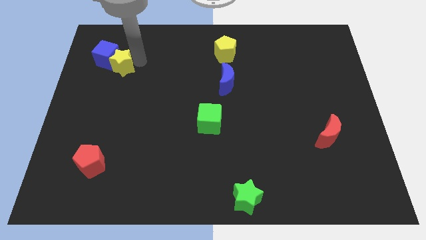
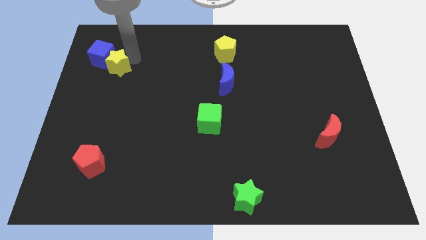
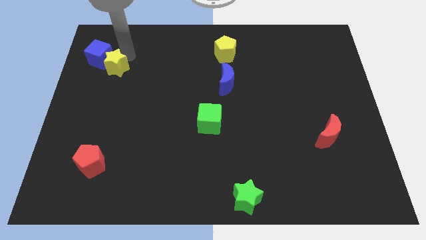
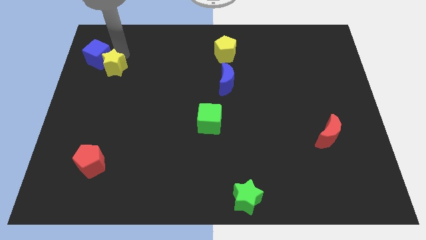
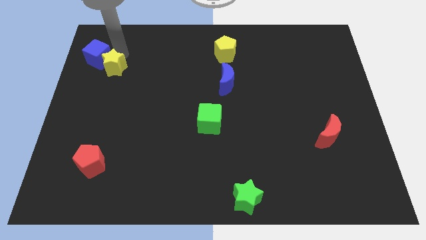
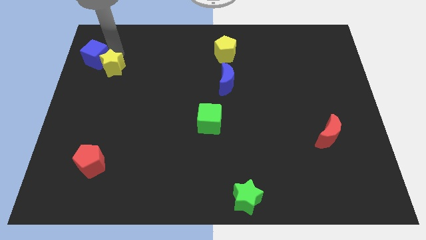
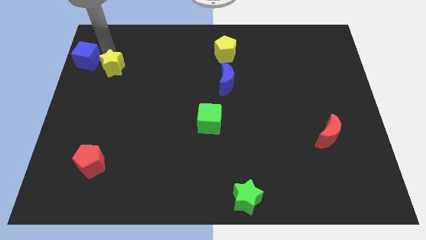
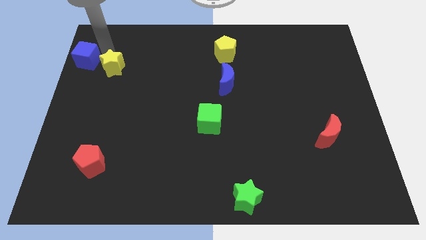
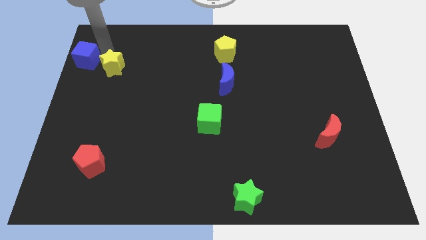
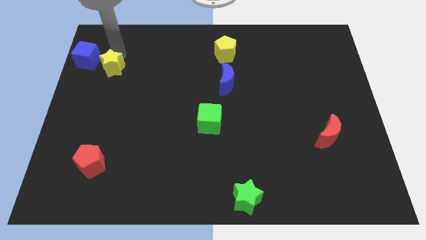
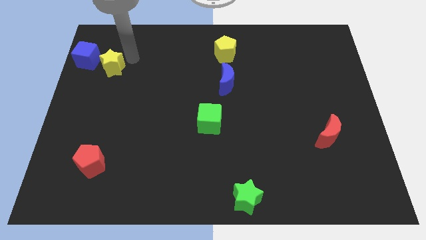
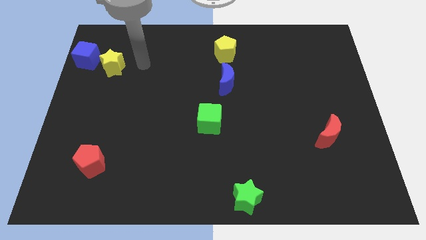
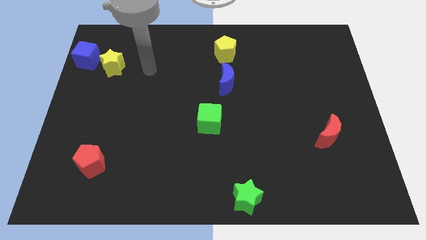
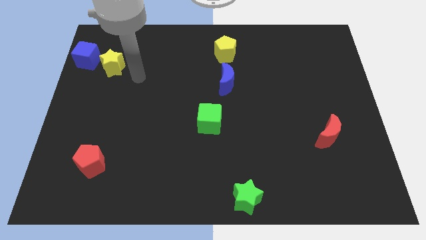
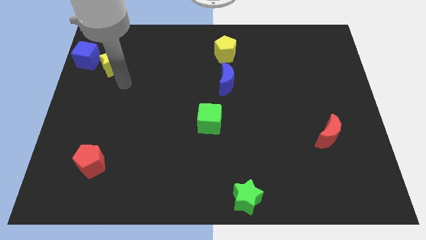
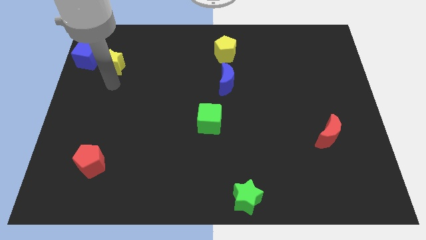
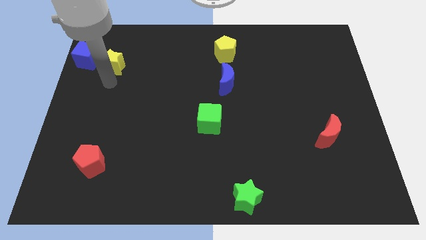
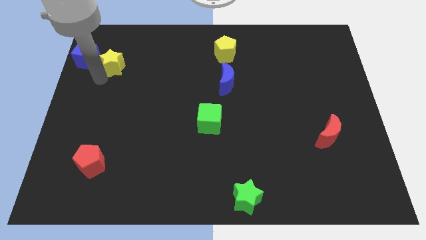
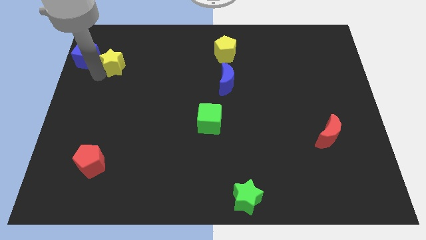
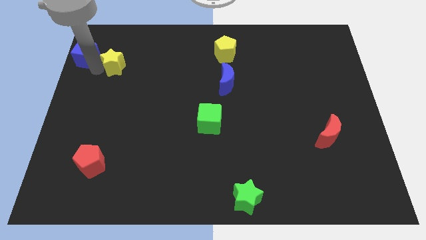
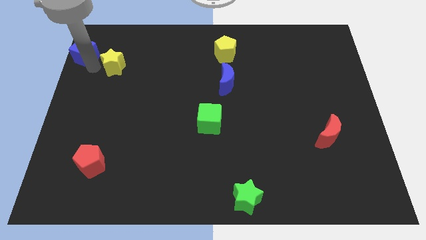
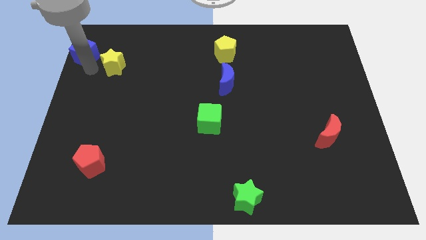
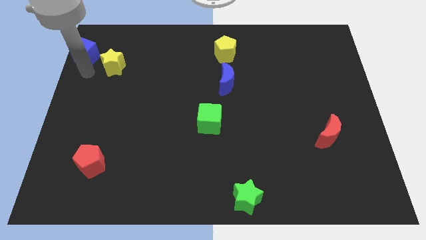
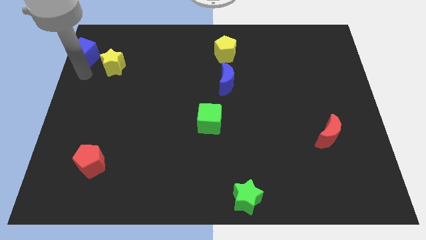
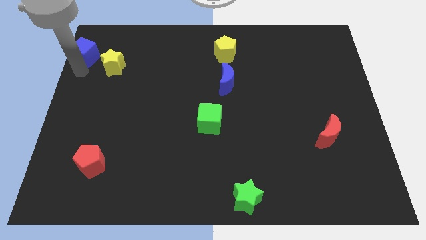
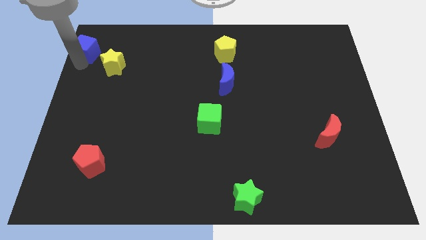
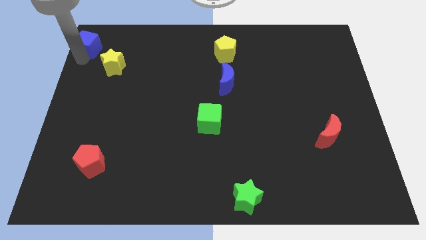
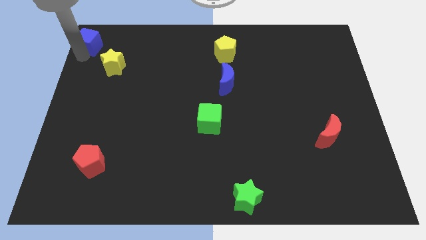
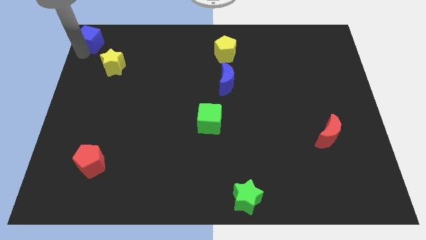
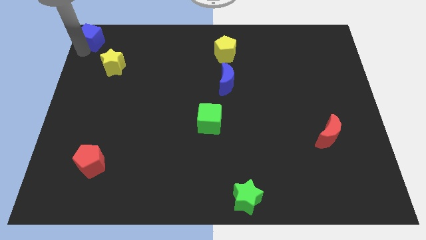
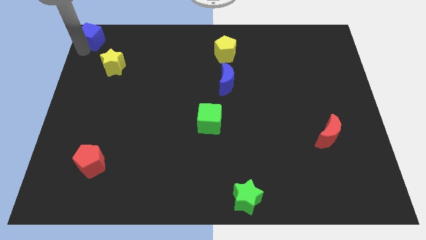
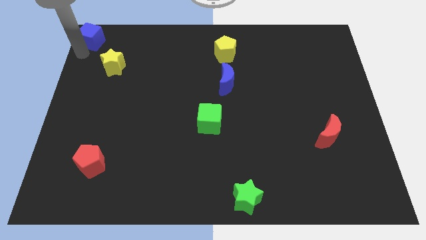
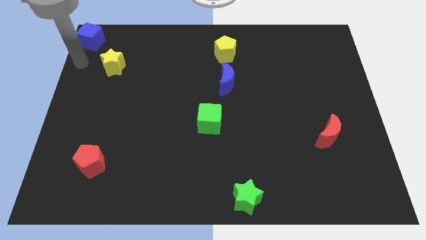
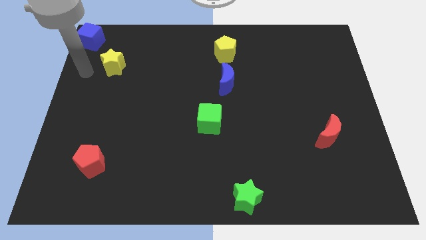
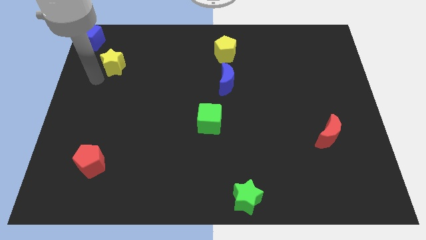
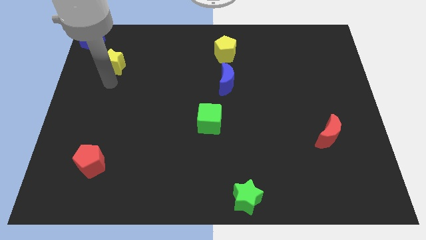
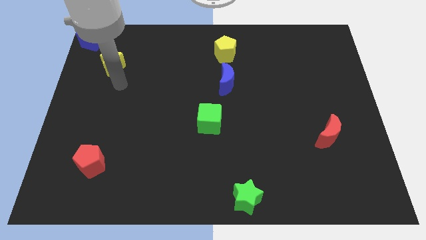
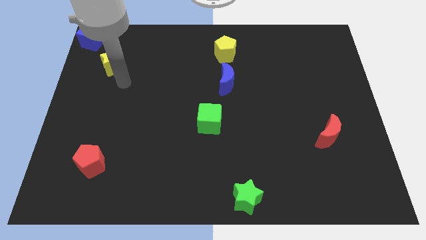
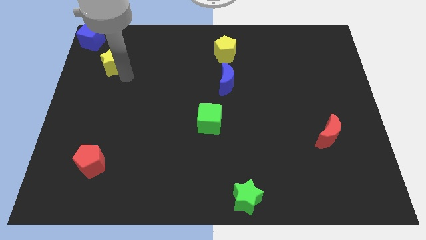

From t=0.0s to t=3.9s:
push the blue cube to the bottom

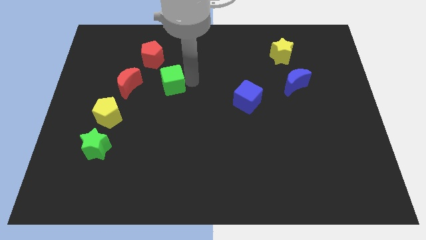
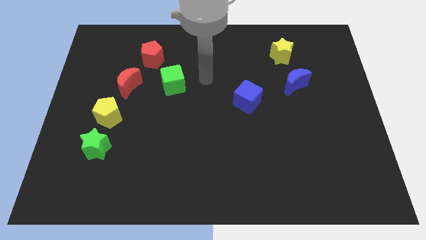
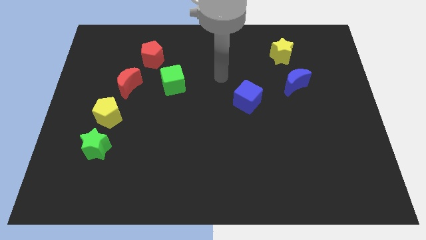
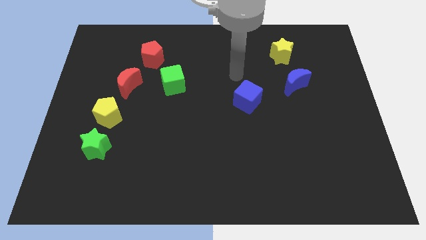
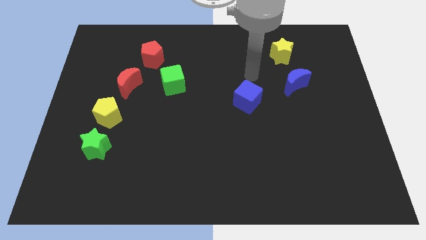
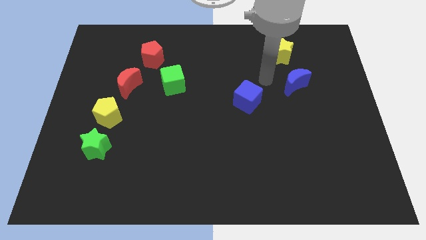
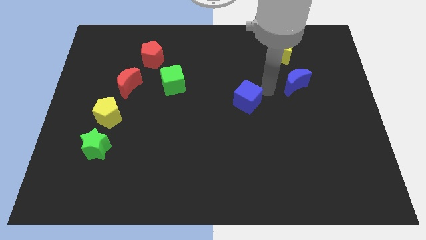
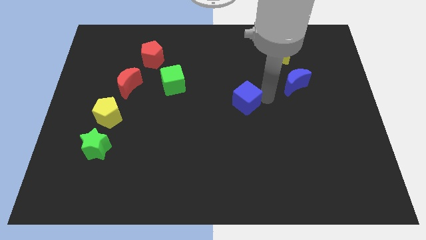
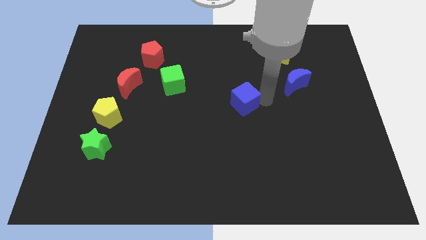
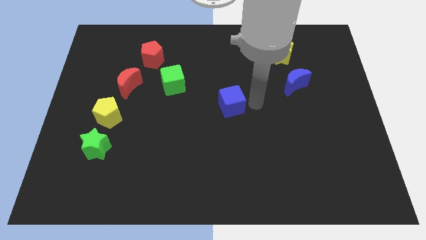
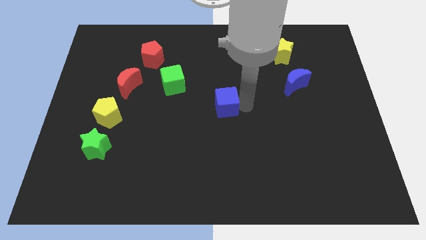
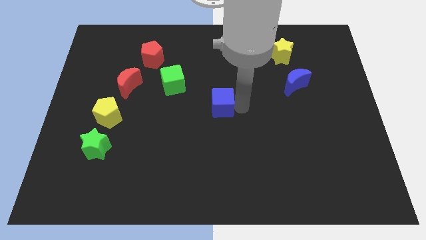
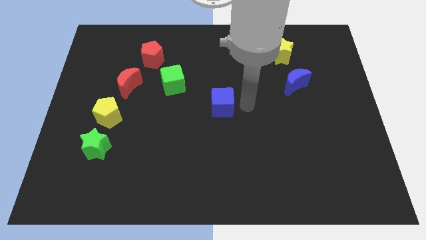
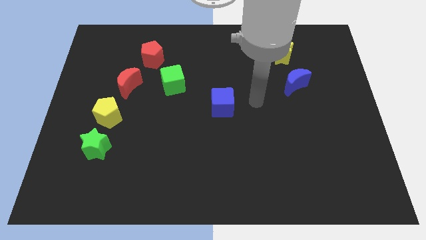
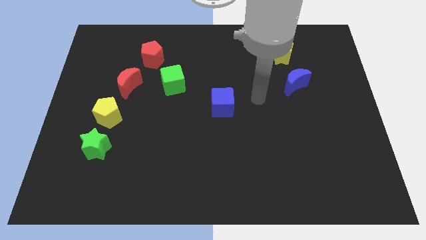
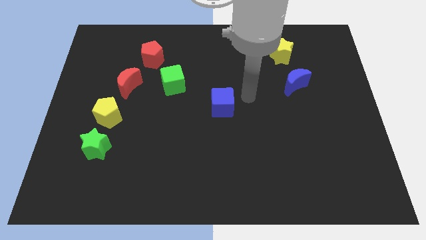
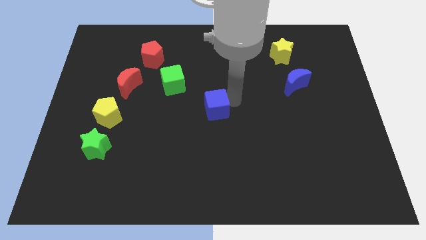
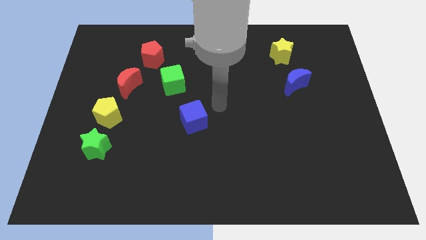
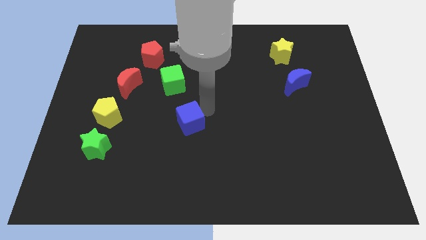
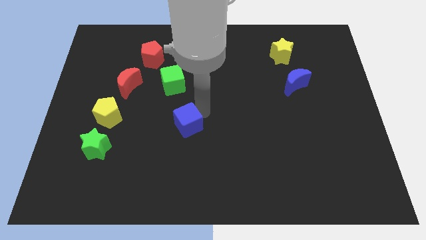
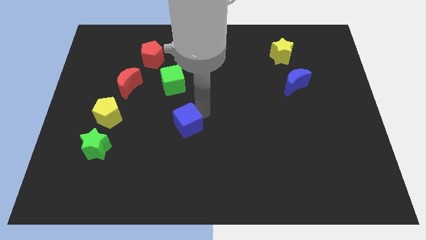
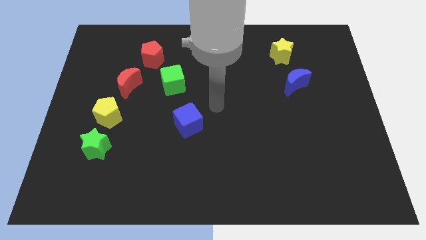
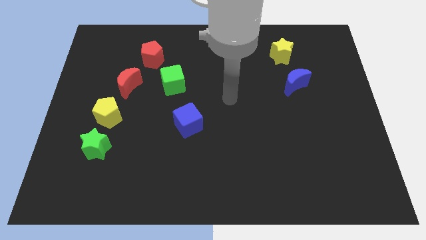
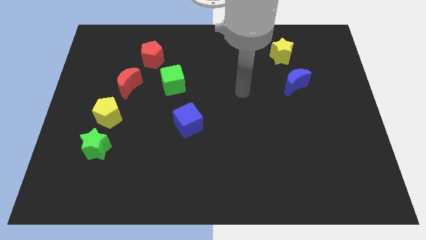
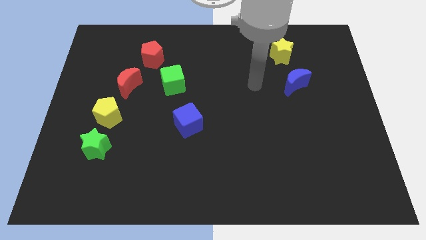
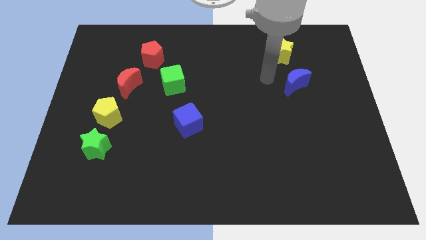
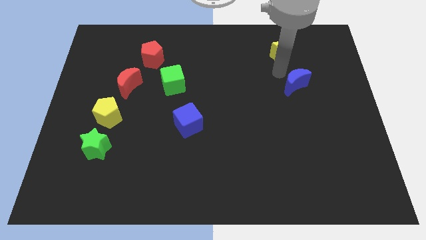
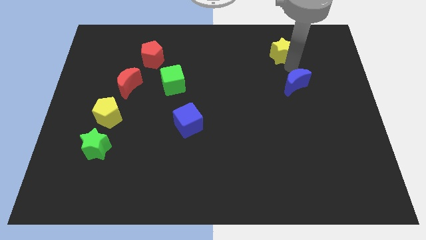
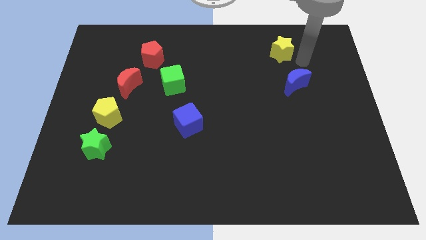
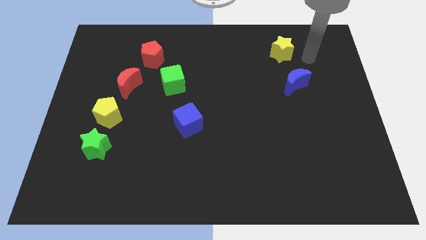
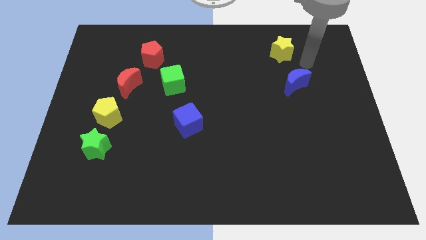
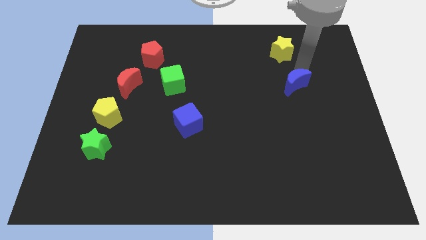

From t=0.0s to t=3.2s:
push the blue cube towards the bottom side of the green cube

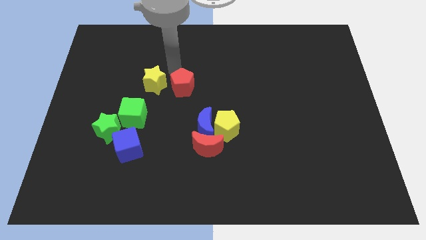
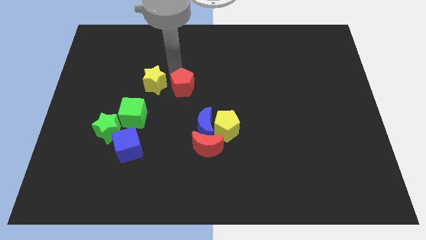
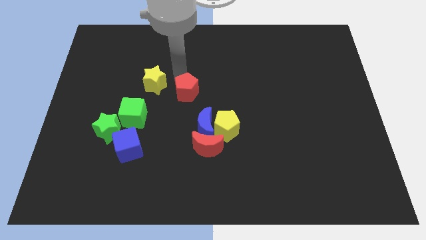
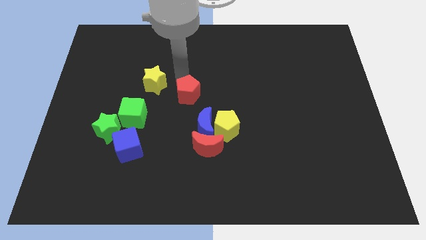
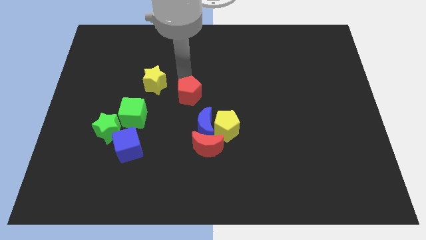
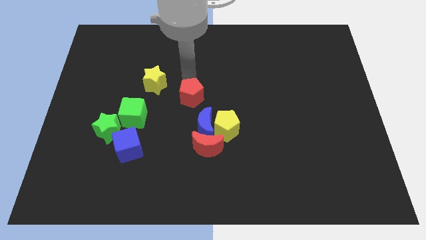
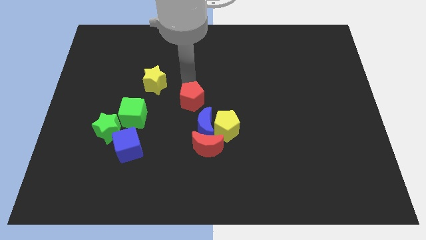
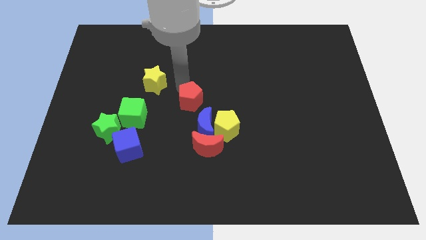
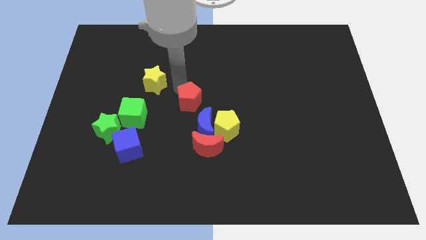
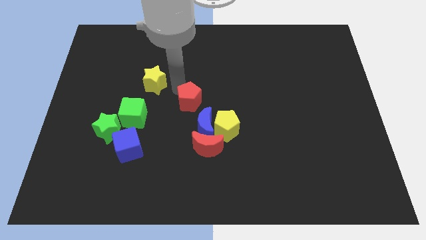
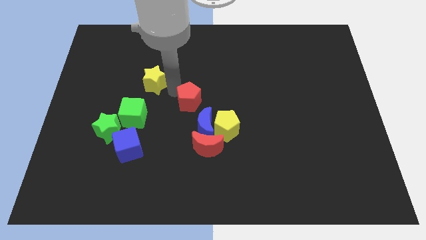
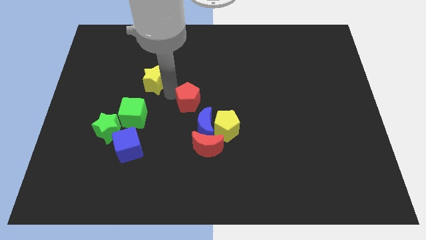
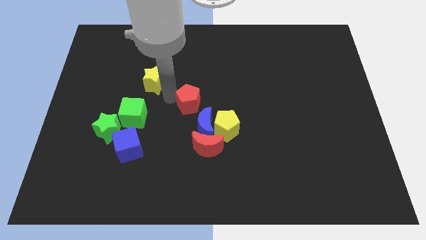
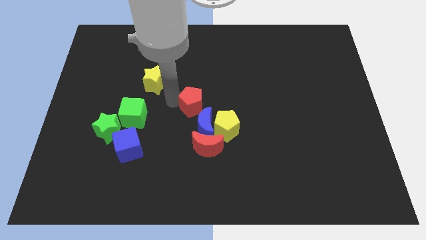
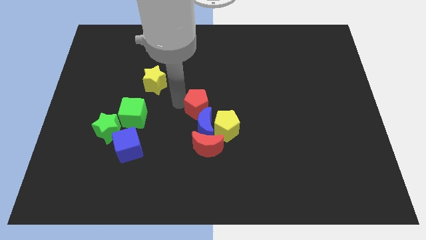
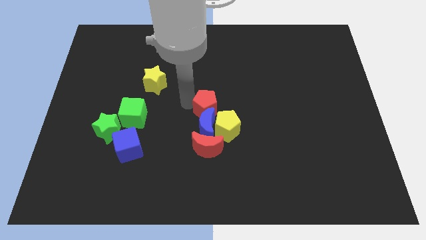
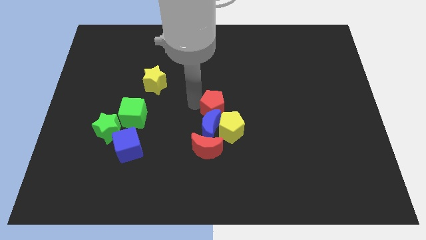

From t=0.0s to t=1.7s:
move red pentagon into blue crescent

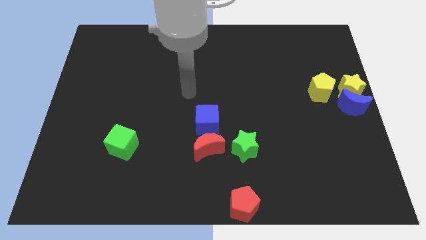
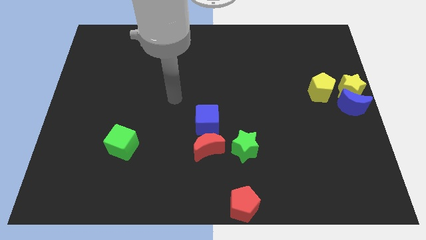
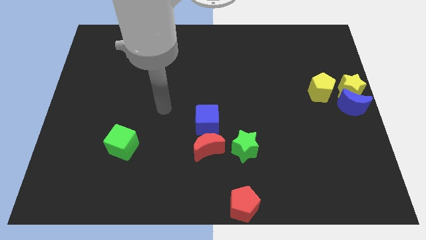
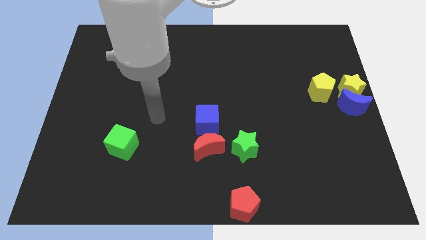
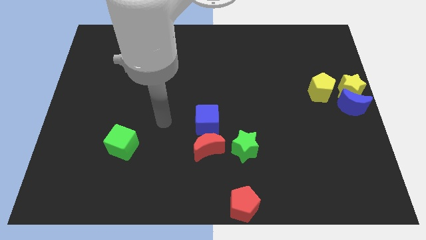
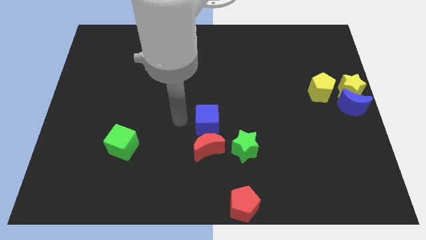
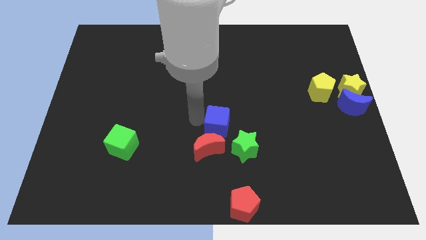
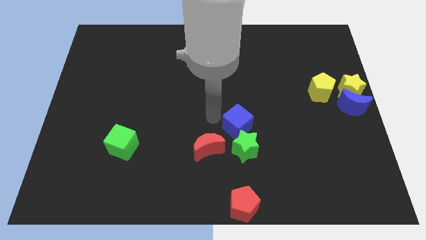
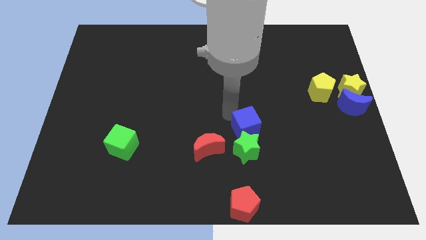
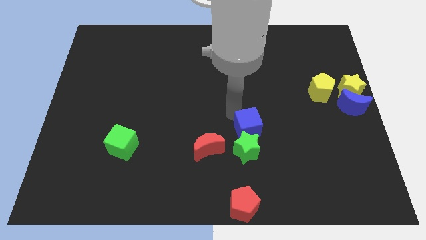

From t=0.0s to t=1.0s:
push the blue cube to the top of the green star
